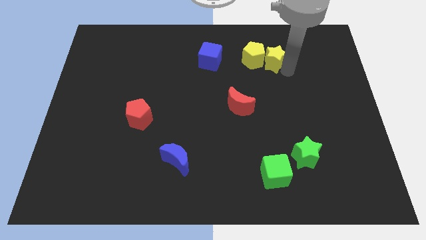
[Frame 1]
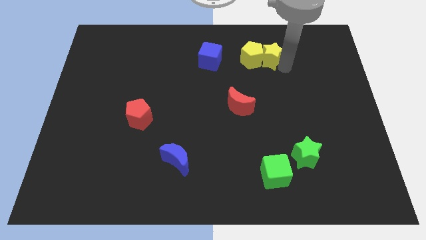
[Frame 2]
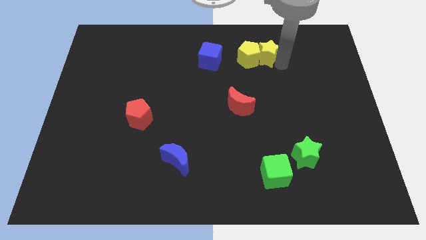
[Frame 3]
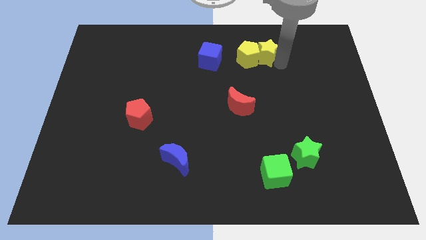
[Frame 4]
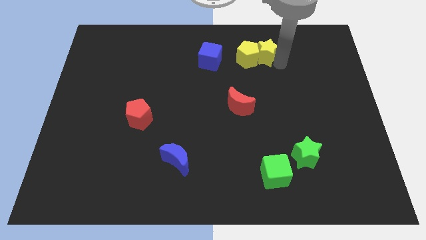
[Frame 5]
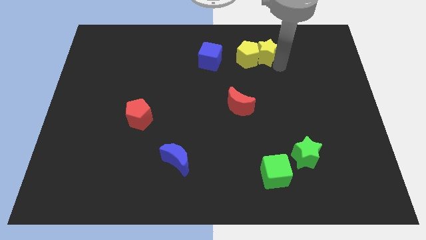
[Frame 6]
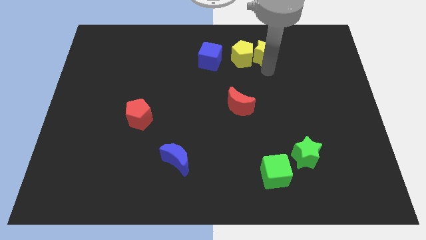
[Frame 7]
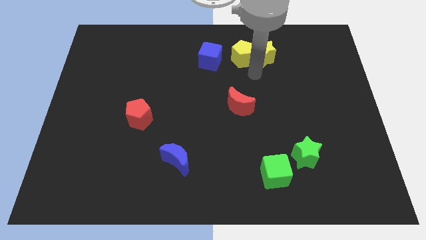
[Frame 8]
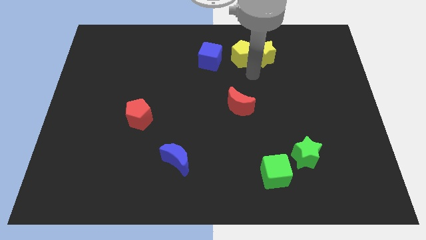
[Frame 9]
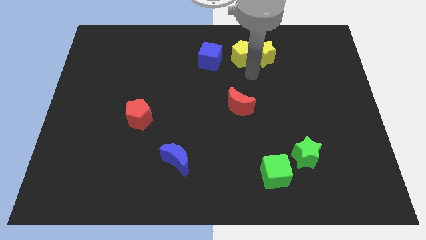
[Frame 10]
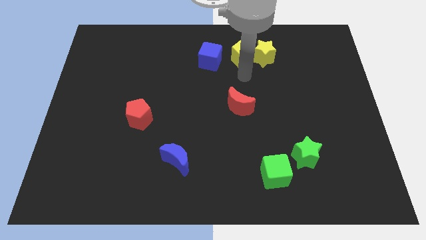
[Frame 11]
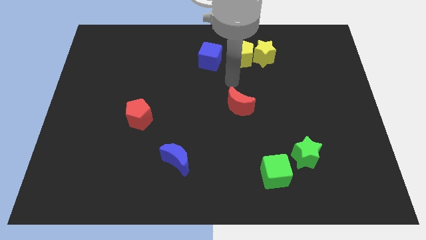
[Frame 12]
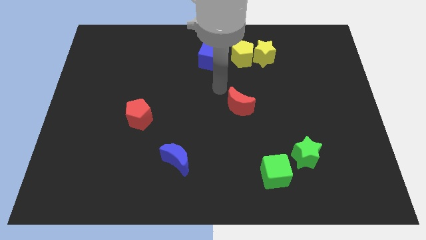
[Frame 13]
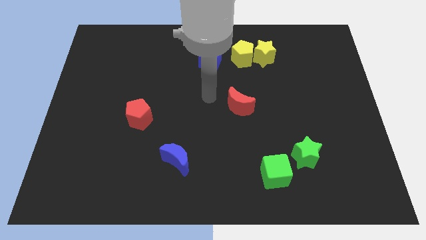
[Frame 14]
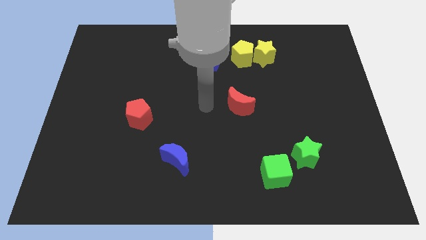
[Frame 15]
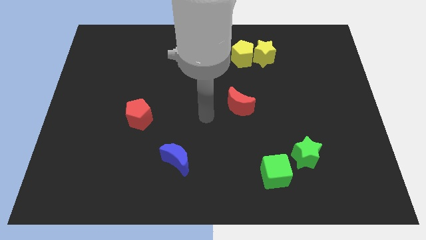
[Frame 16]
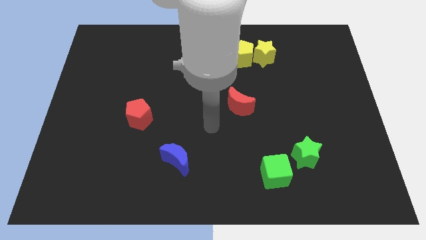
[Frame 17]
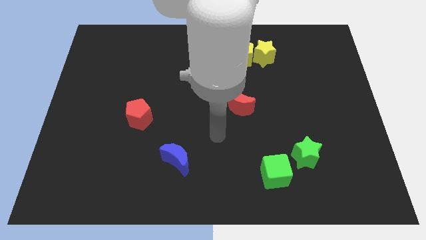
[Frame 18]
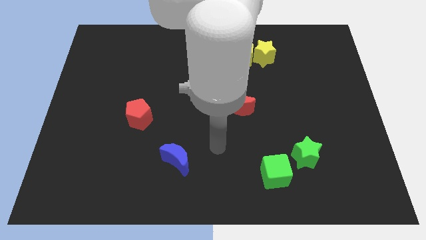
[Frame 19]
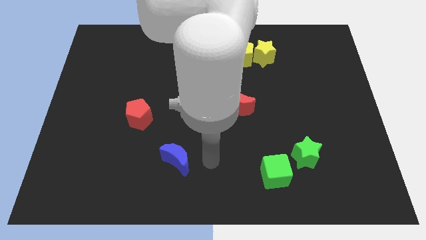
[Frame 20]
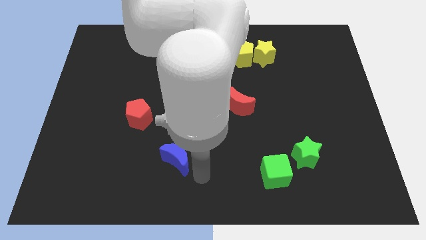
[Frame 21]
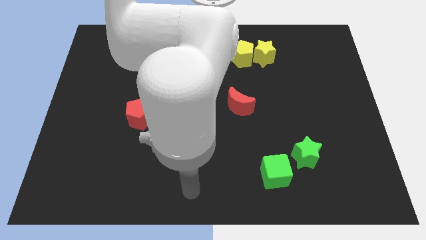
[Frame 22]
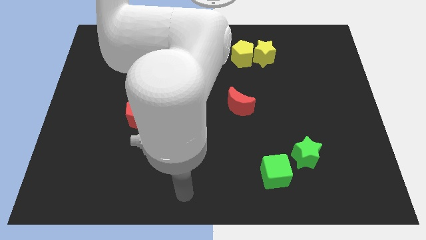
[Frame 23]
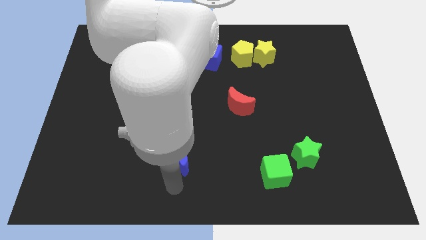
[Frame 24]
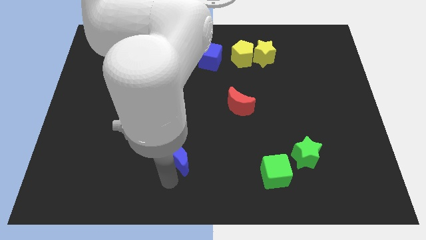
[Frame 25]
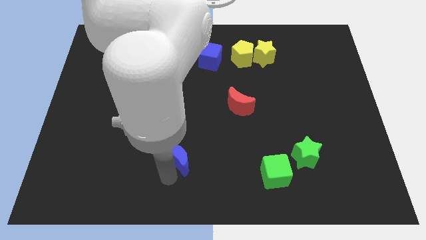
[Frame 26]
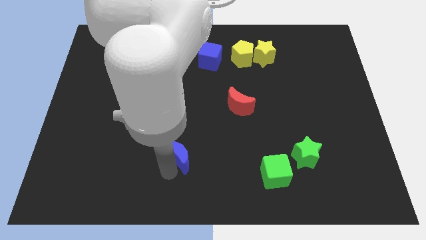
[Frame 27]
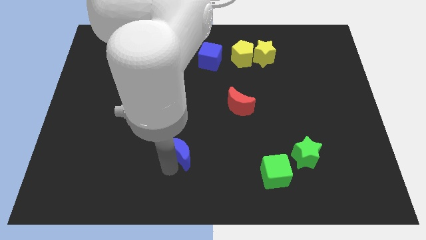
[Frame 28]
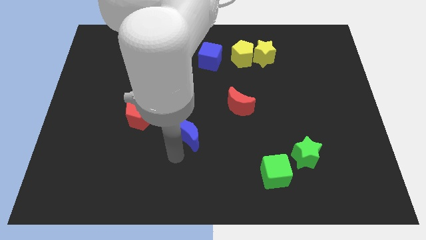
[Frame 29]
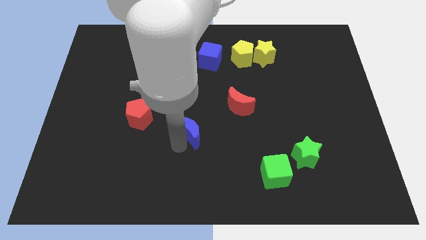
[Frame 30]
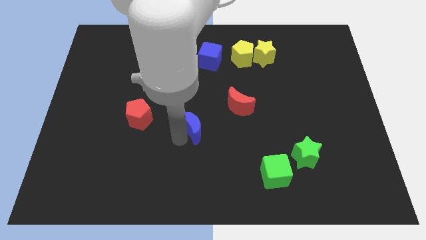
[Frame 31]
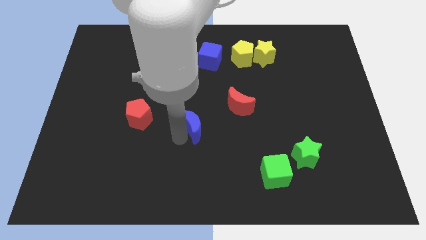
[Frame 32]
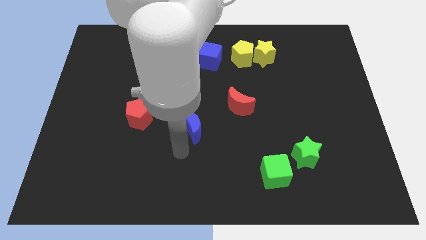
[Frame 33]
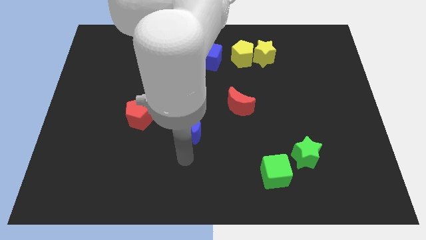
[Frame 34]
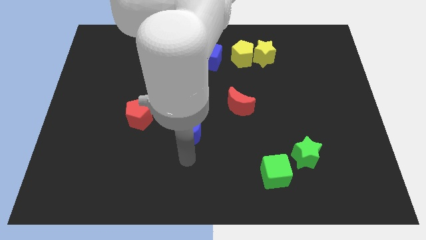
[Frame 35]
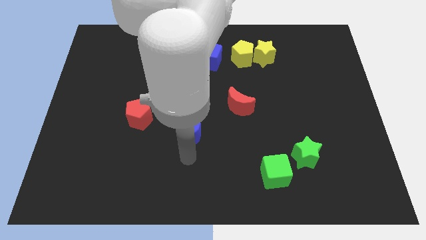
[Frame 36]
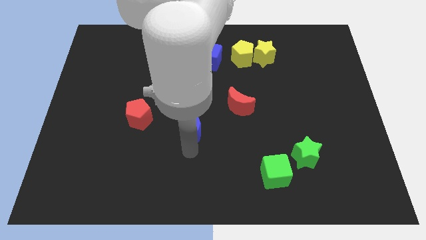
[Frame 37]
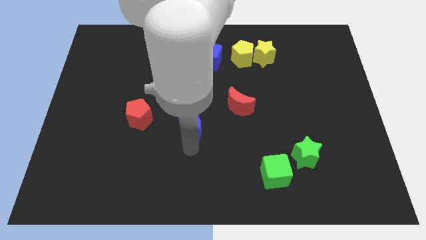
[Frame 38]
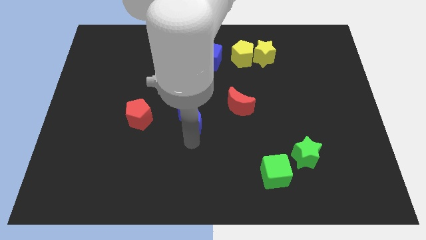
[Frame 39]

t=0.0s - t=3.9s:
move the blue moon to the right of the red pentagon

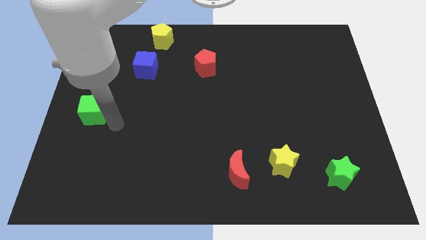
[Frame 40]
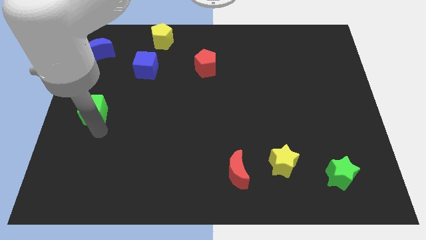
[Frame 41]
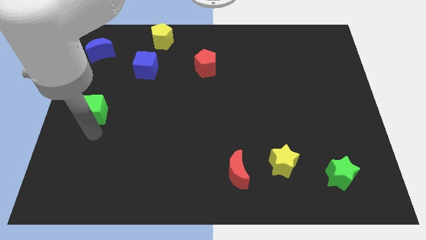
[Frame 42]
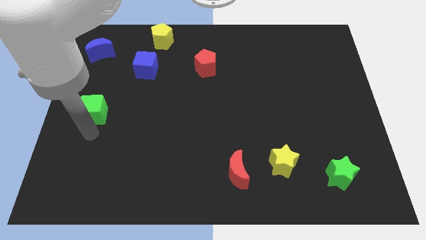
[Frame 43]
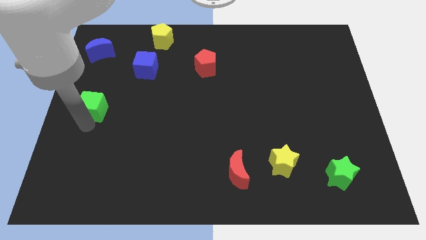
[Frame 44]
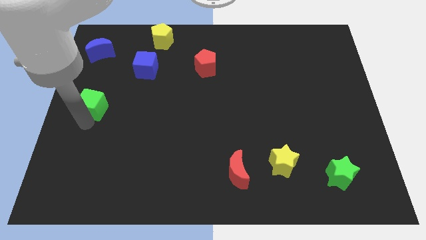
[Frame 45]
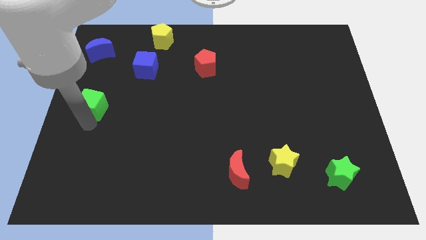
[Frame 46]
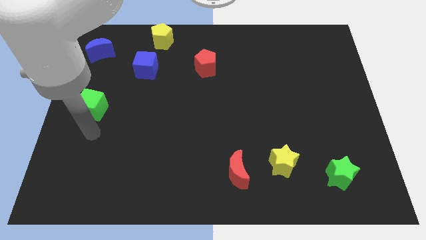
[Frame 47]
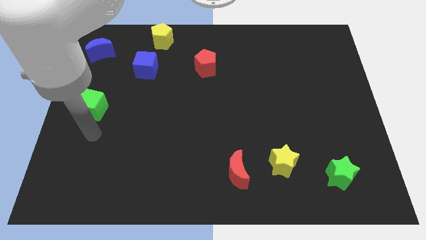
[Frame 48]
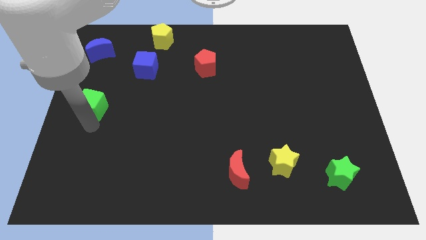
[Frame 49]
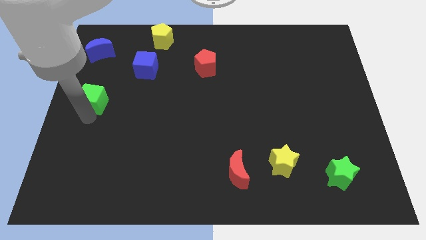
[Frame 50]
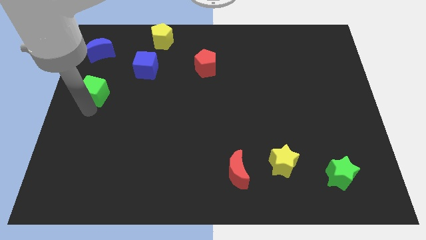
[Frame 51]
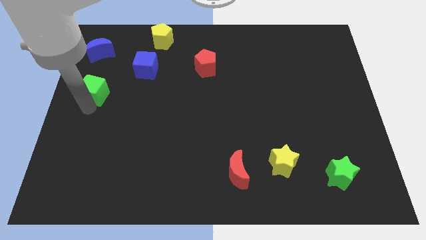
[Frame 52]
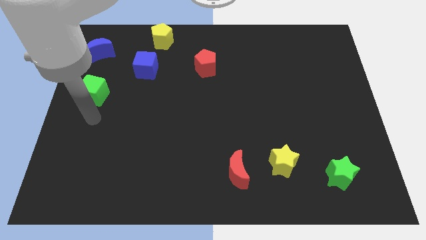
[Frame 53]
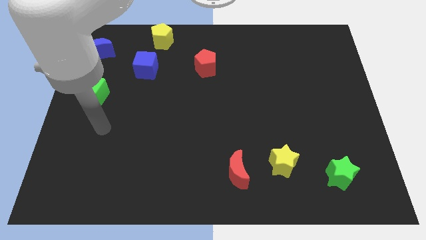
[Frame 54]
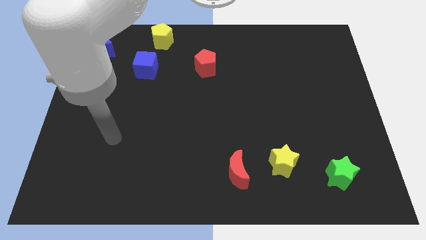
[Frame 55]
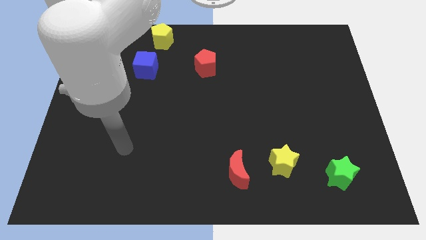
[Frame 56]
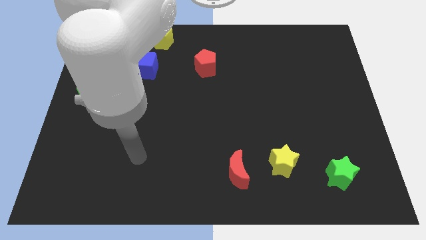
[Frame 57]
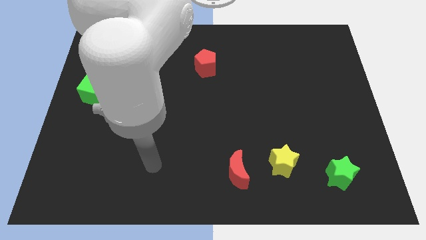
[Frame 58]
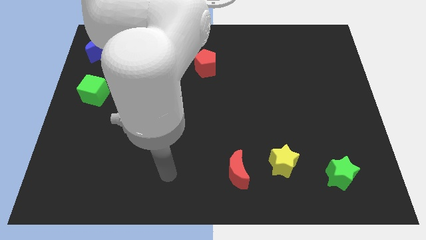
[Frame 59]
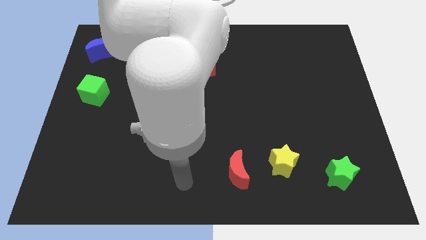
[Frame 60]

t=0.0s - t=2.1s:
push the green cube slightly to the top of the board

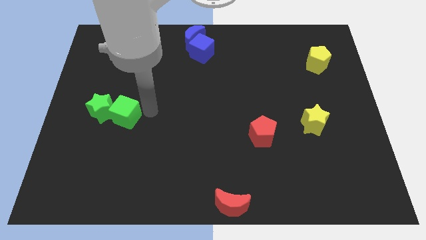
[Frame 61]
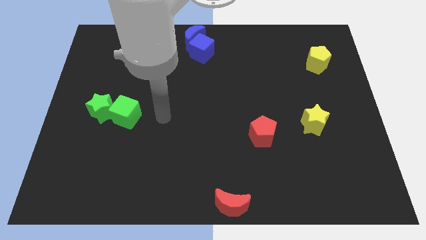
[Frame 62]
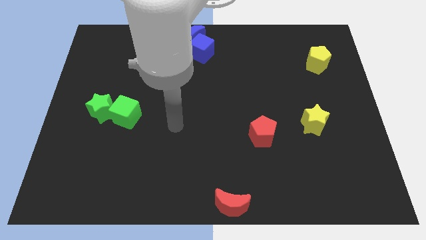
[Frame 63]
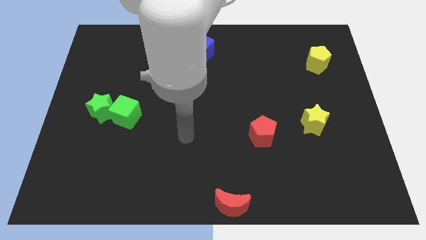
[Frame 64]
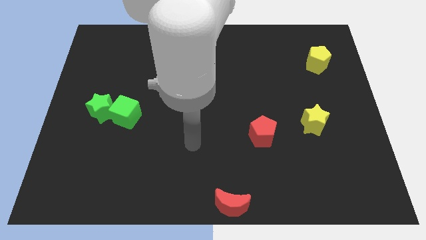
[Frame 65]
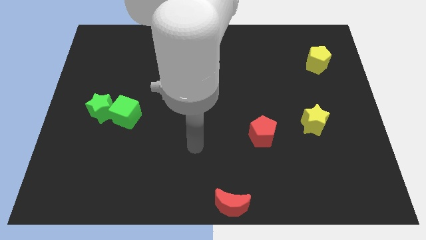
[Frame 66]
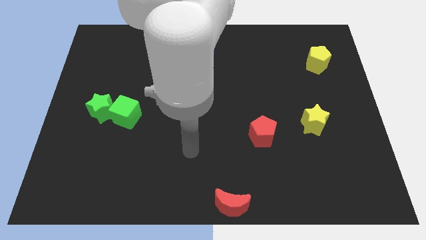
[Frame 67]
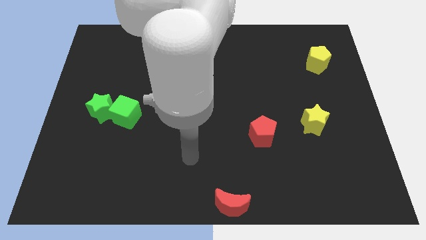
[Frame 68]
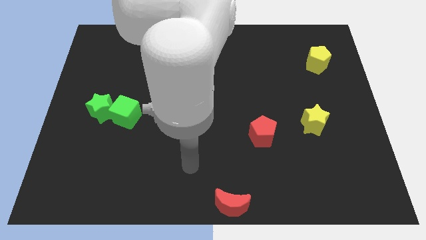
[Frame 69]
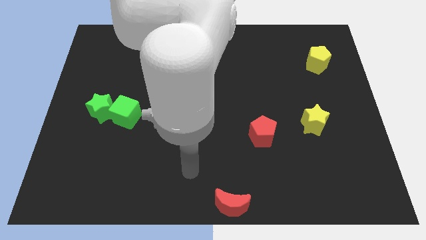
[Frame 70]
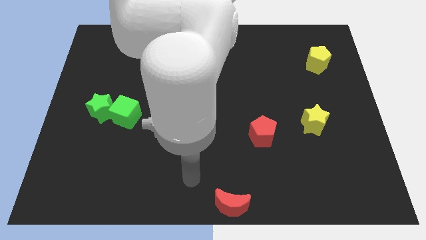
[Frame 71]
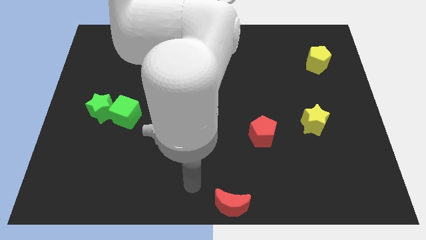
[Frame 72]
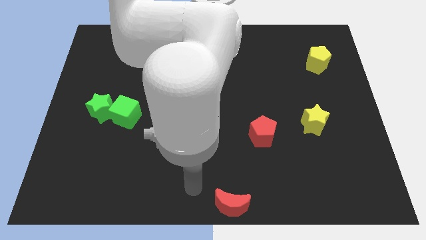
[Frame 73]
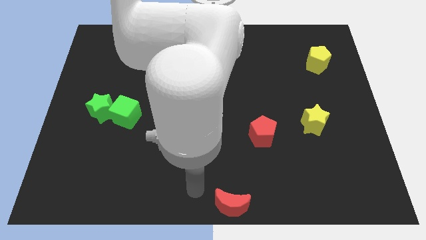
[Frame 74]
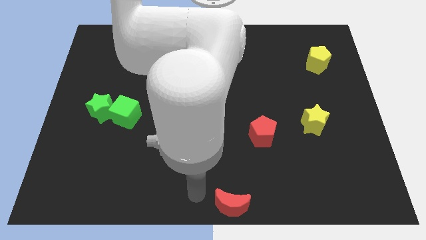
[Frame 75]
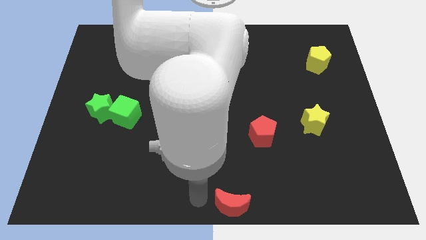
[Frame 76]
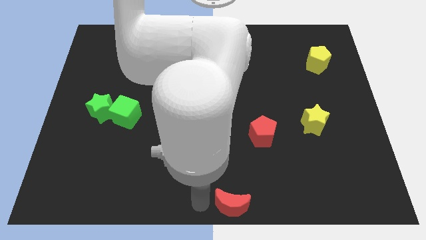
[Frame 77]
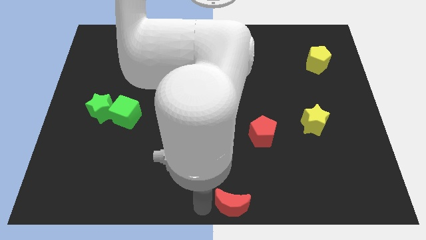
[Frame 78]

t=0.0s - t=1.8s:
move your arm away from the green cube

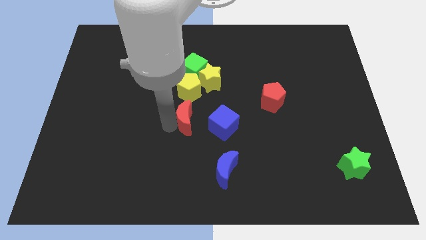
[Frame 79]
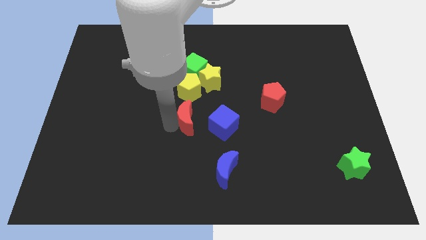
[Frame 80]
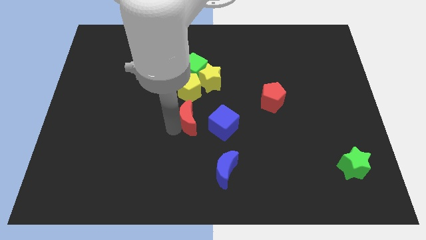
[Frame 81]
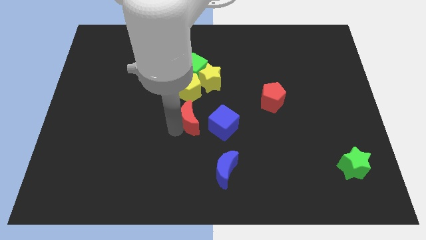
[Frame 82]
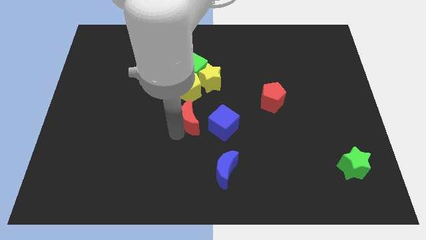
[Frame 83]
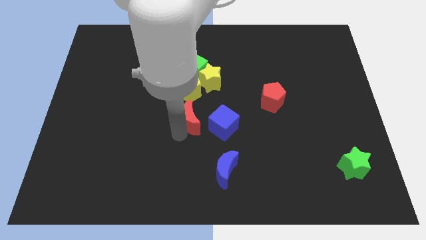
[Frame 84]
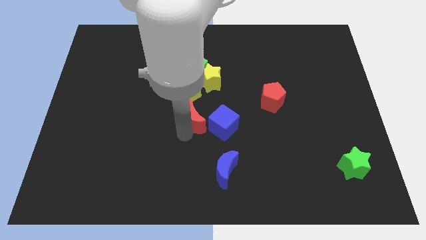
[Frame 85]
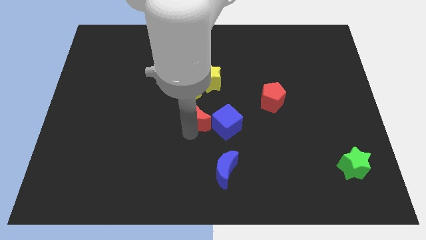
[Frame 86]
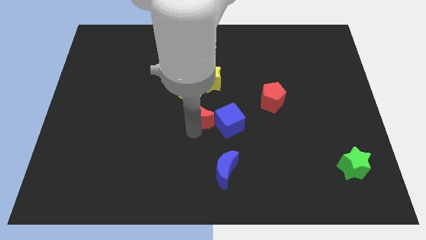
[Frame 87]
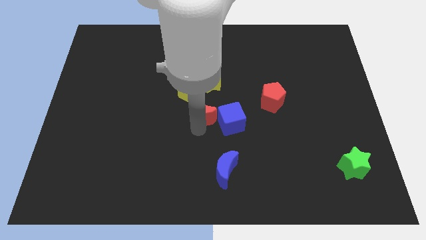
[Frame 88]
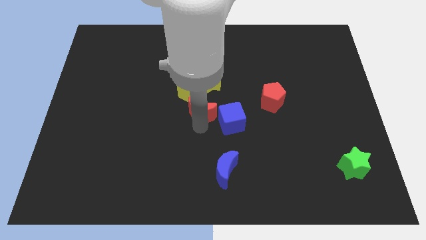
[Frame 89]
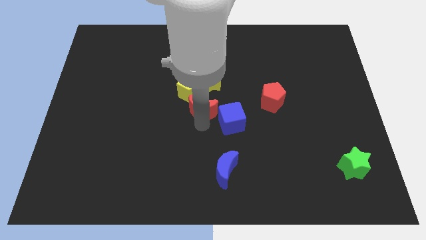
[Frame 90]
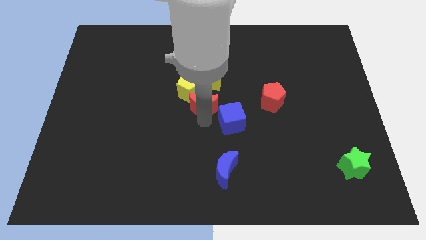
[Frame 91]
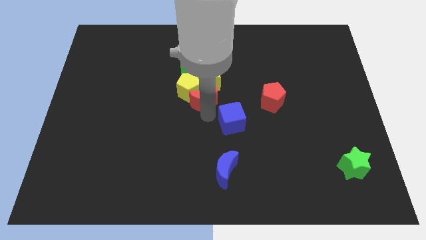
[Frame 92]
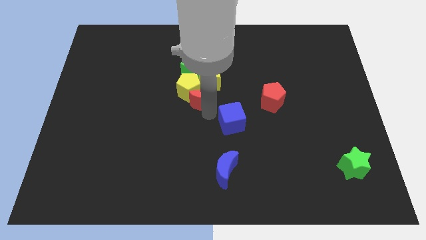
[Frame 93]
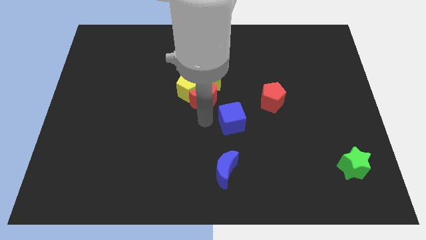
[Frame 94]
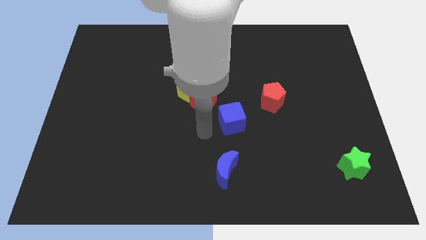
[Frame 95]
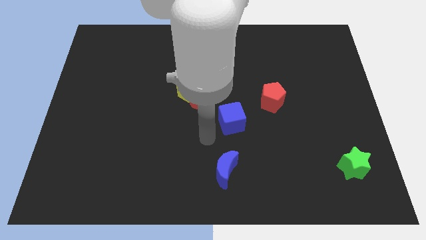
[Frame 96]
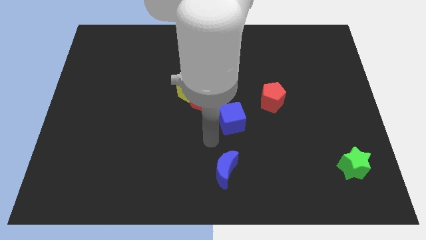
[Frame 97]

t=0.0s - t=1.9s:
move the red moon into the yellow pentagon
